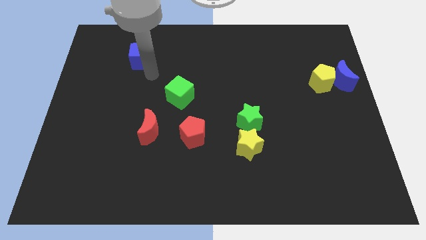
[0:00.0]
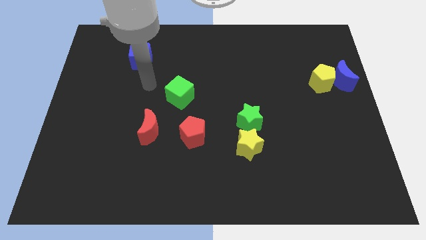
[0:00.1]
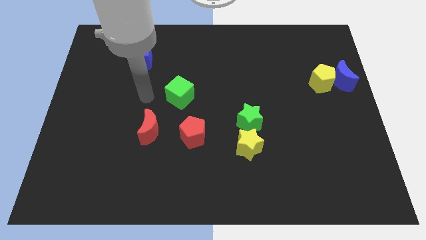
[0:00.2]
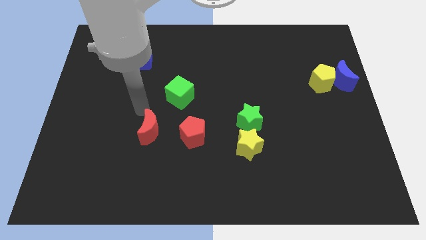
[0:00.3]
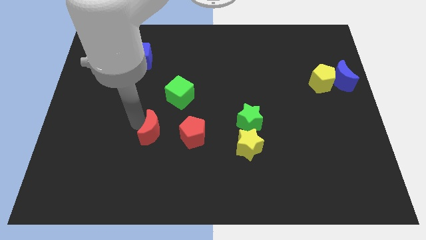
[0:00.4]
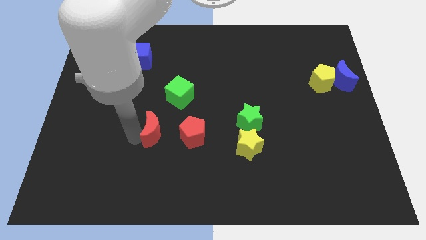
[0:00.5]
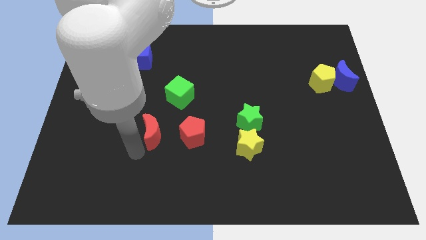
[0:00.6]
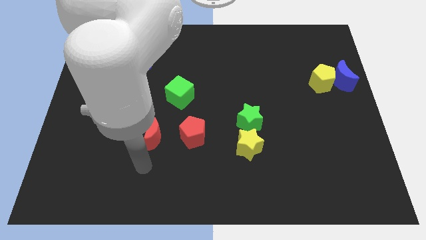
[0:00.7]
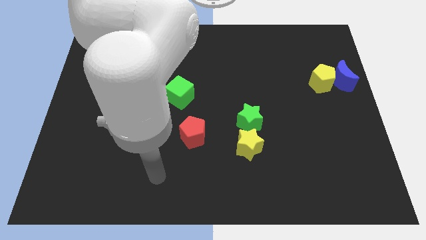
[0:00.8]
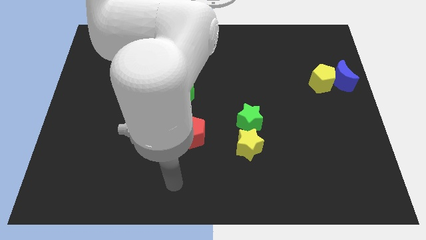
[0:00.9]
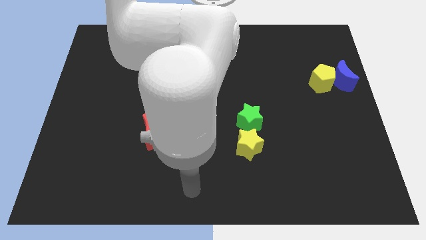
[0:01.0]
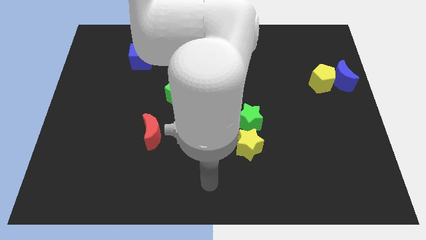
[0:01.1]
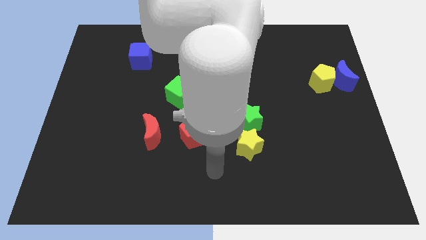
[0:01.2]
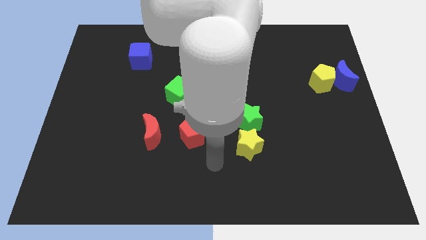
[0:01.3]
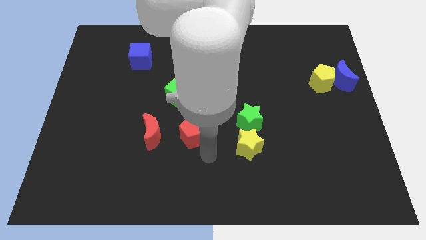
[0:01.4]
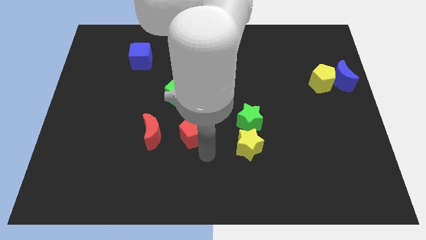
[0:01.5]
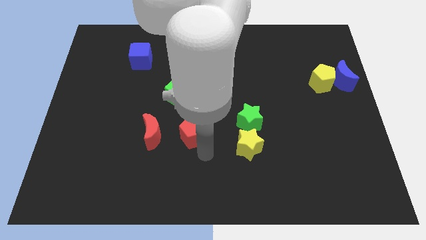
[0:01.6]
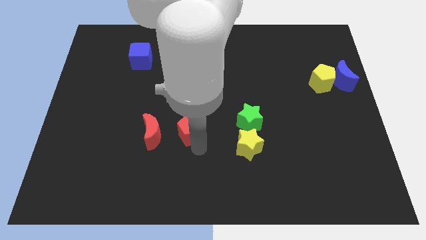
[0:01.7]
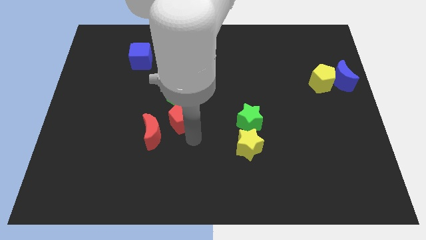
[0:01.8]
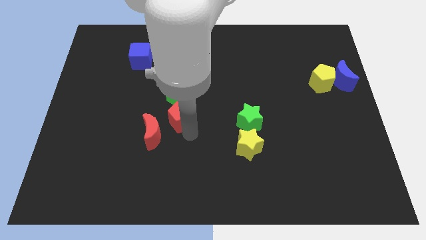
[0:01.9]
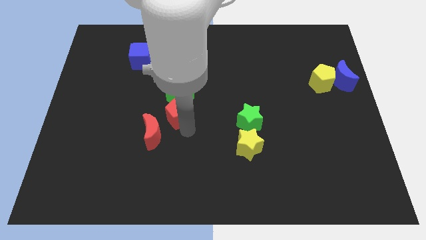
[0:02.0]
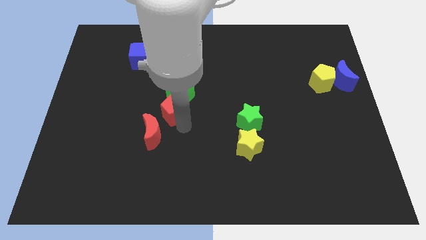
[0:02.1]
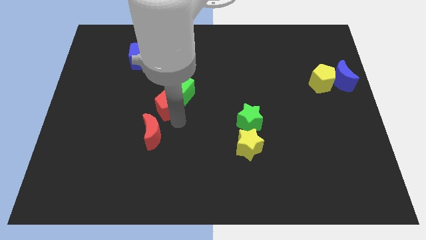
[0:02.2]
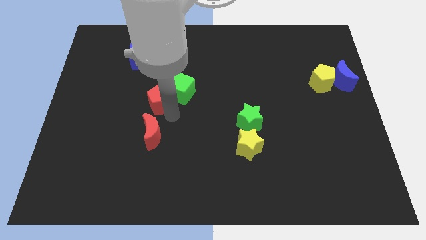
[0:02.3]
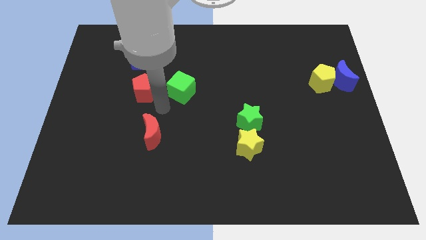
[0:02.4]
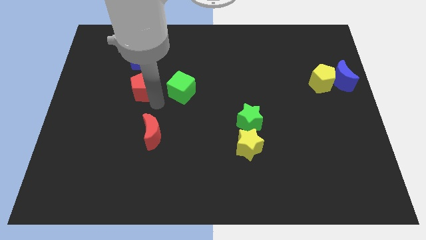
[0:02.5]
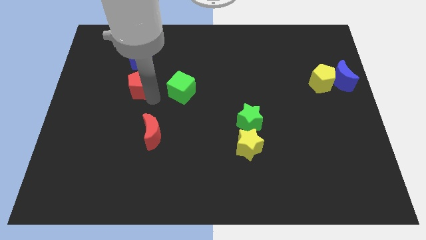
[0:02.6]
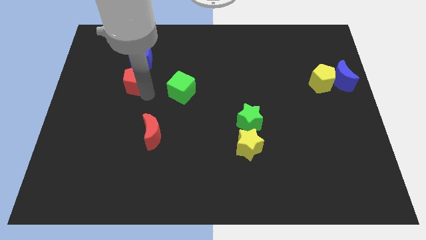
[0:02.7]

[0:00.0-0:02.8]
place red pentagon below the blue cube

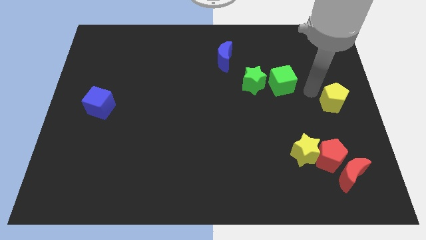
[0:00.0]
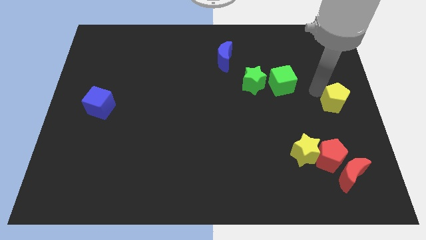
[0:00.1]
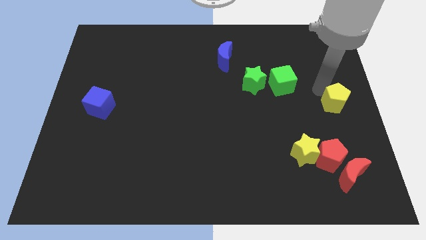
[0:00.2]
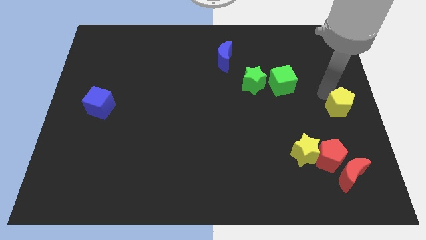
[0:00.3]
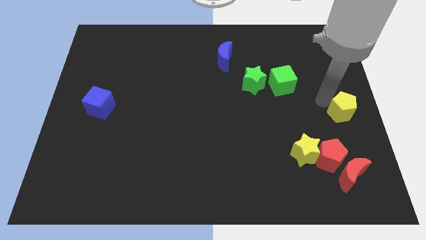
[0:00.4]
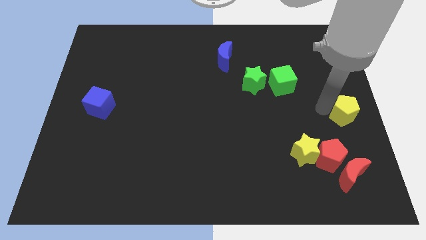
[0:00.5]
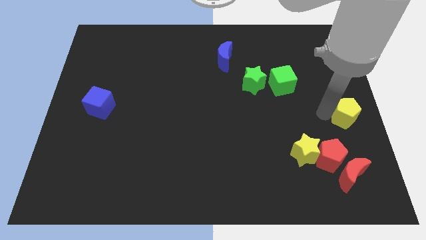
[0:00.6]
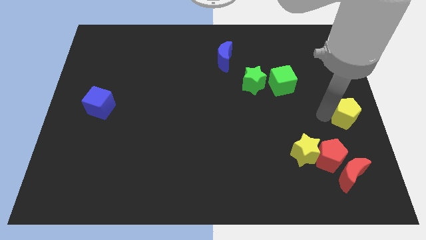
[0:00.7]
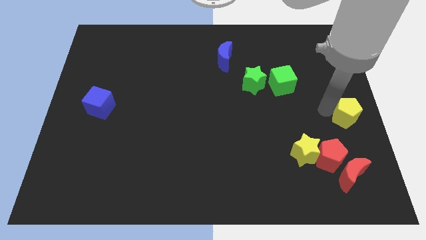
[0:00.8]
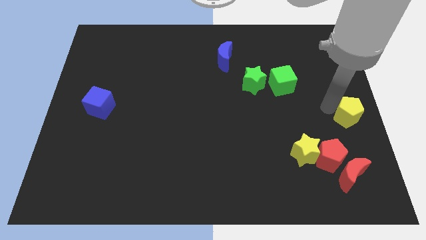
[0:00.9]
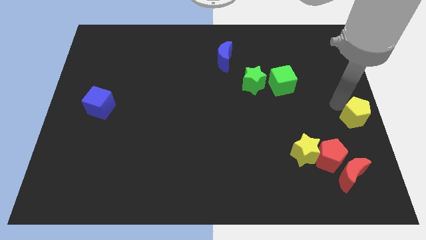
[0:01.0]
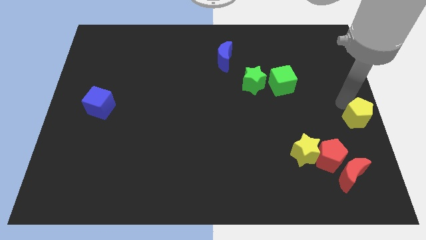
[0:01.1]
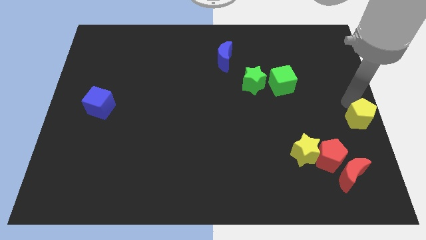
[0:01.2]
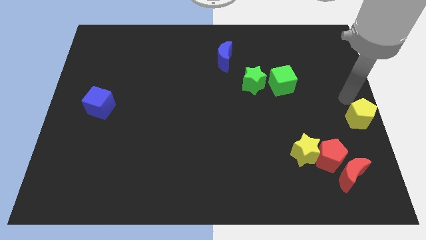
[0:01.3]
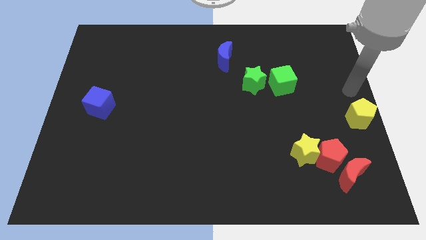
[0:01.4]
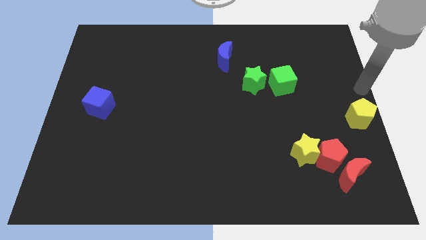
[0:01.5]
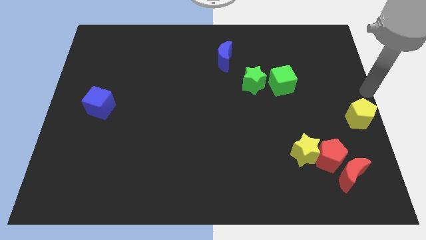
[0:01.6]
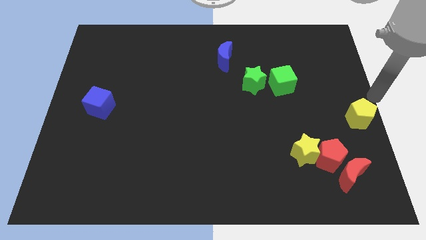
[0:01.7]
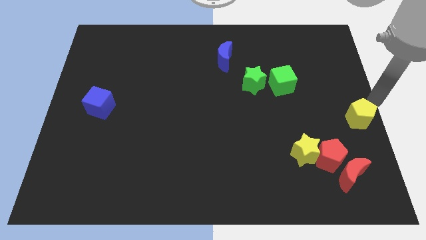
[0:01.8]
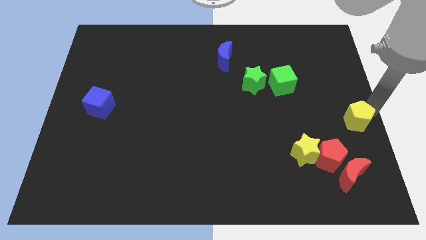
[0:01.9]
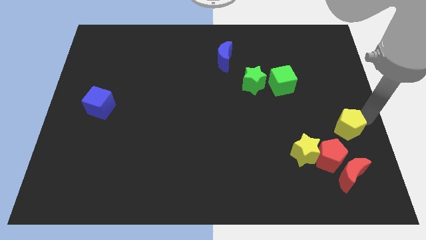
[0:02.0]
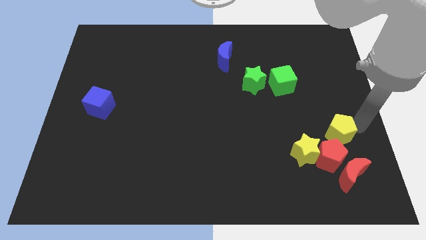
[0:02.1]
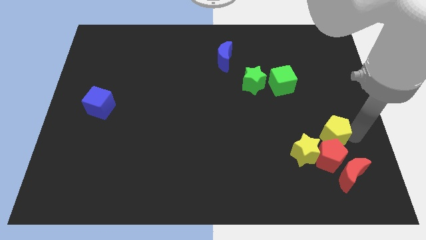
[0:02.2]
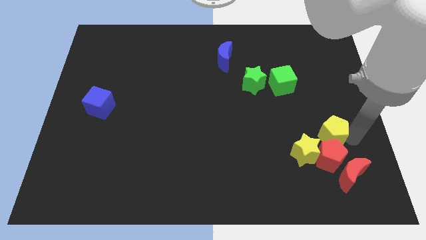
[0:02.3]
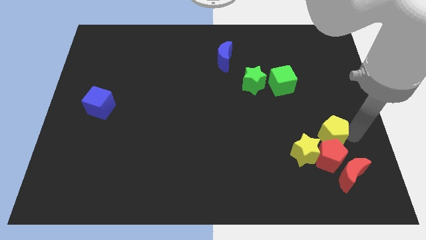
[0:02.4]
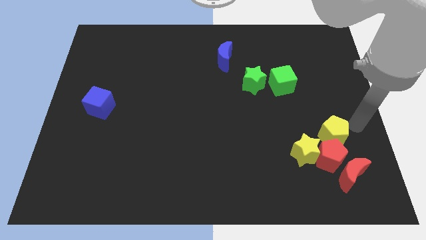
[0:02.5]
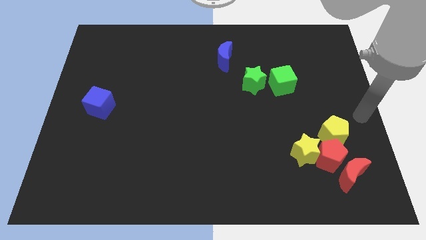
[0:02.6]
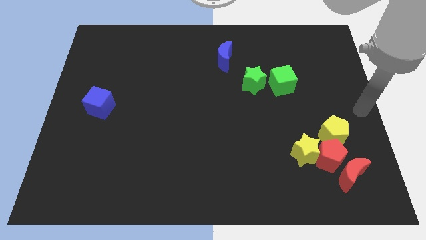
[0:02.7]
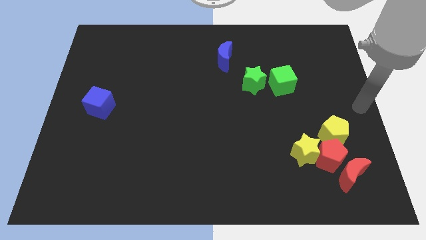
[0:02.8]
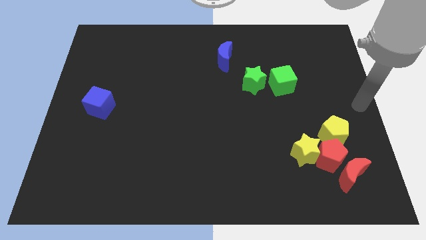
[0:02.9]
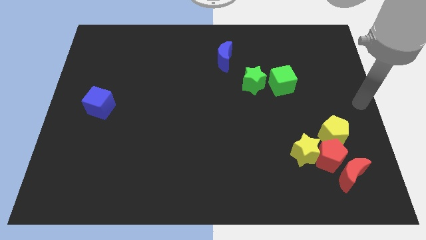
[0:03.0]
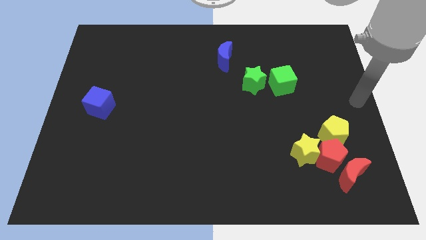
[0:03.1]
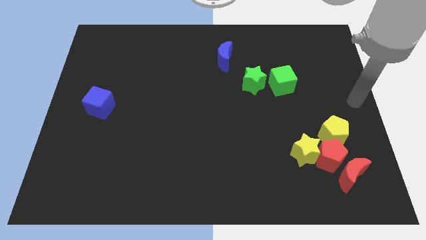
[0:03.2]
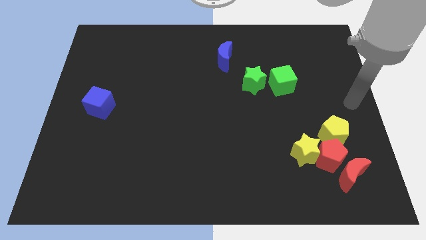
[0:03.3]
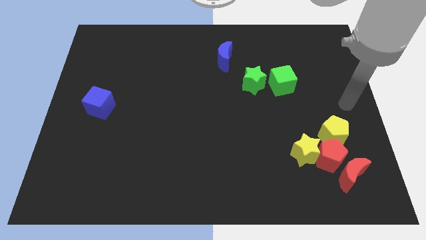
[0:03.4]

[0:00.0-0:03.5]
move the yellow pentagon into the red pentagon

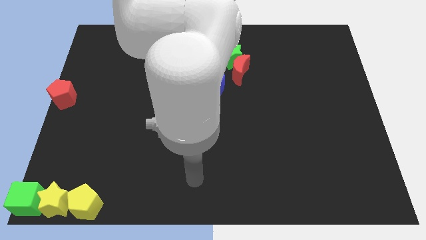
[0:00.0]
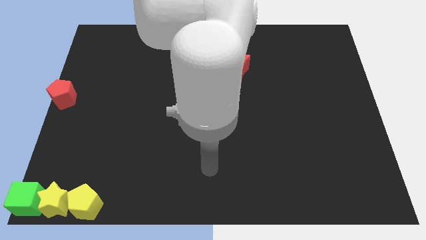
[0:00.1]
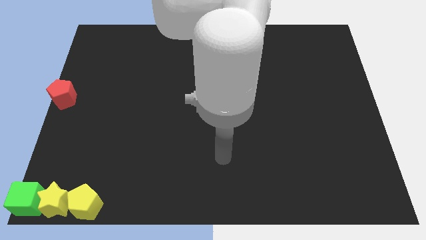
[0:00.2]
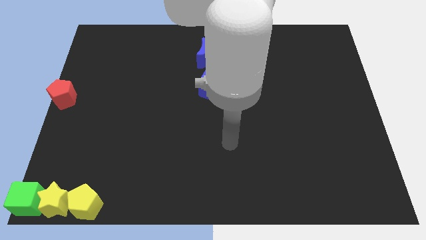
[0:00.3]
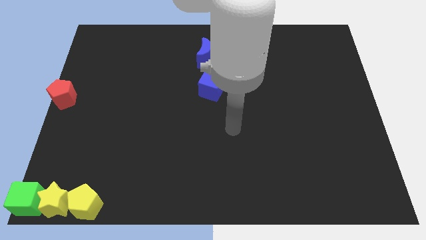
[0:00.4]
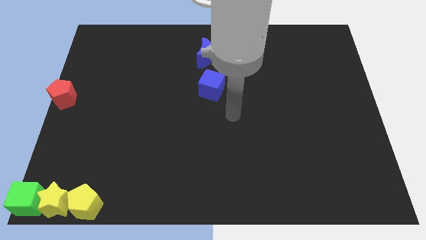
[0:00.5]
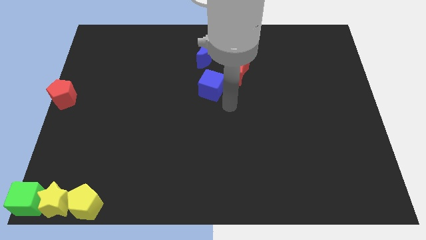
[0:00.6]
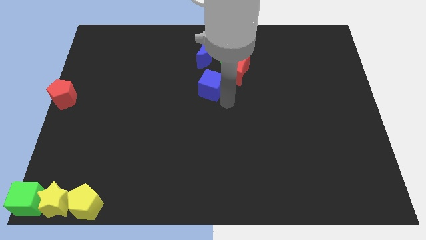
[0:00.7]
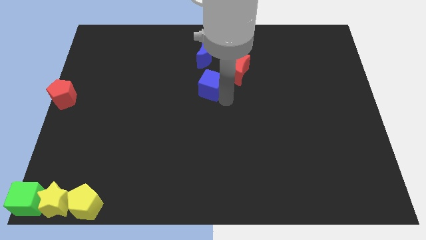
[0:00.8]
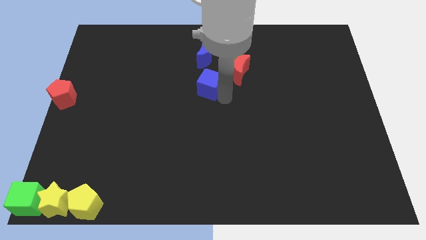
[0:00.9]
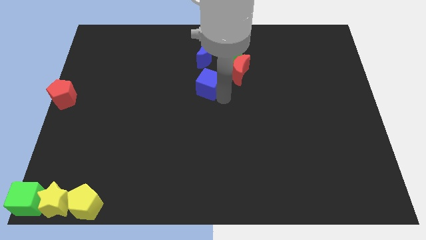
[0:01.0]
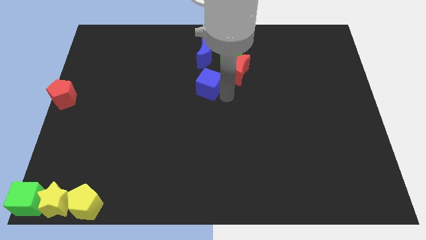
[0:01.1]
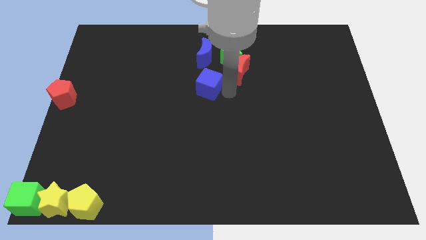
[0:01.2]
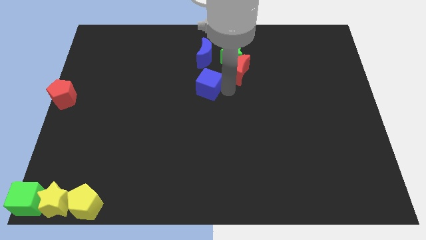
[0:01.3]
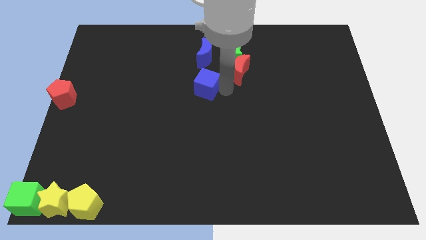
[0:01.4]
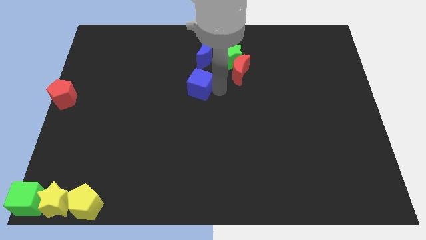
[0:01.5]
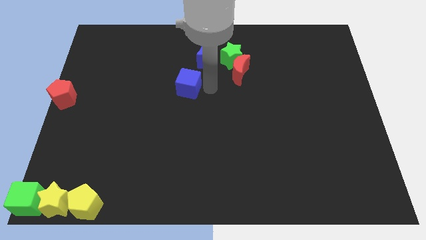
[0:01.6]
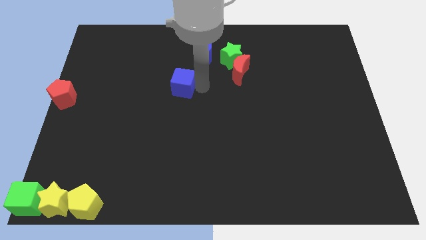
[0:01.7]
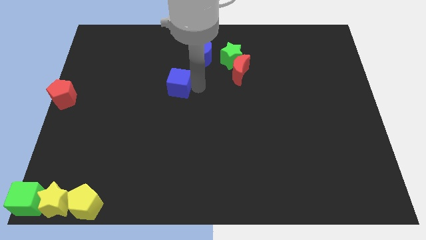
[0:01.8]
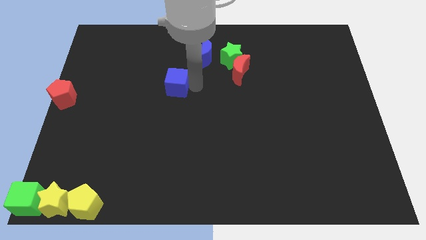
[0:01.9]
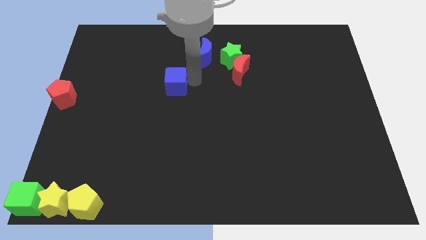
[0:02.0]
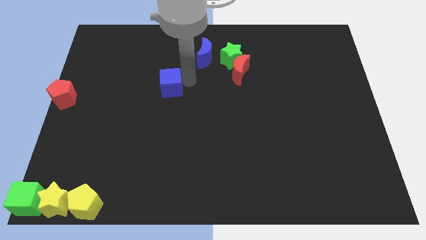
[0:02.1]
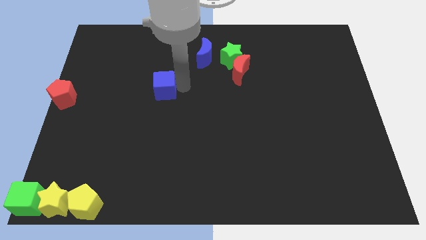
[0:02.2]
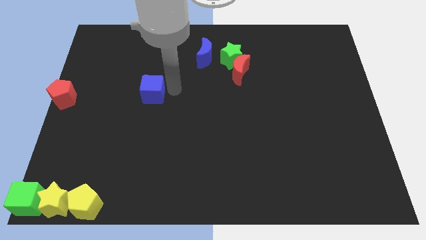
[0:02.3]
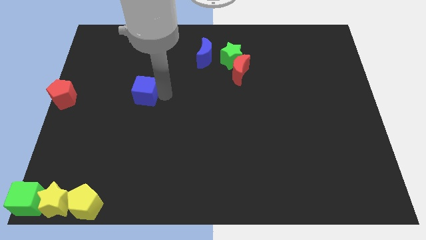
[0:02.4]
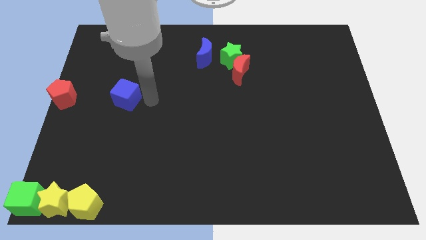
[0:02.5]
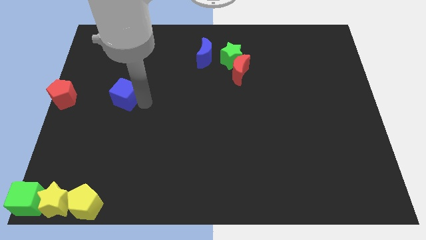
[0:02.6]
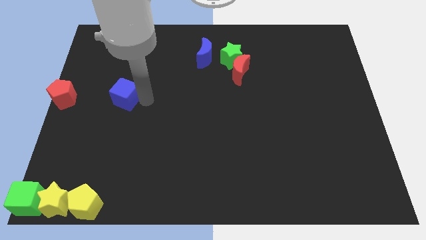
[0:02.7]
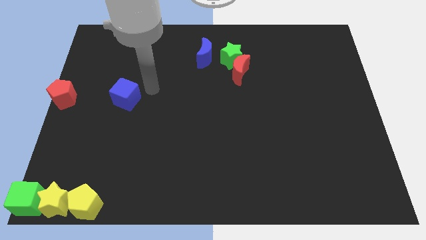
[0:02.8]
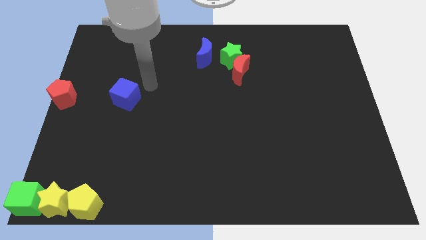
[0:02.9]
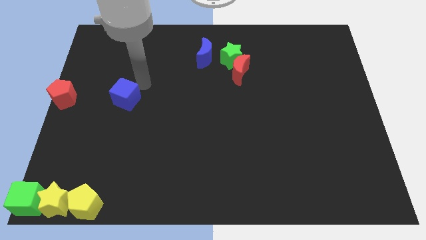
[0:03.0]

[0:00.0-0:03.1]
move the blue cube to the right side of the red pentagon
